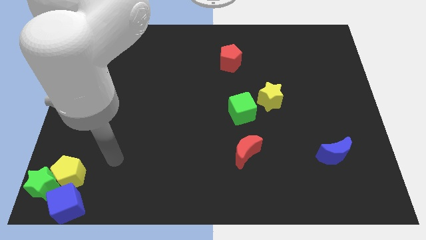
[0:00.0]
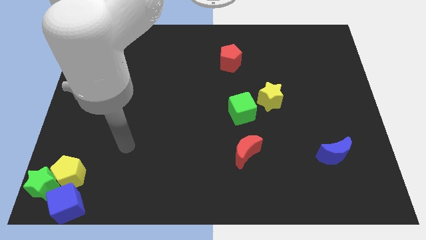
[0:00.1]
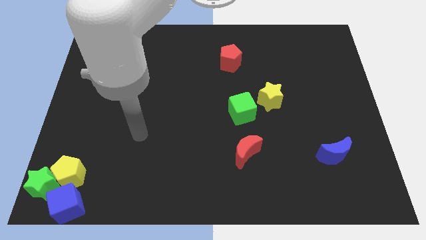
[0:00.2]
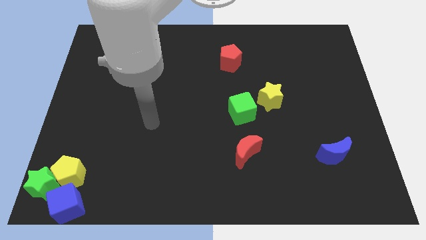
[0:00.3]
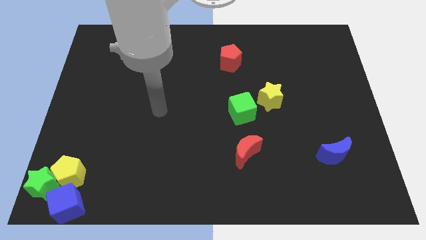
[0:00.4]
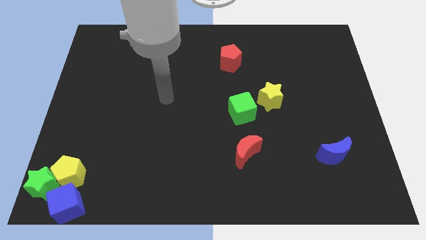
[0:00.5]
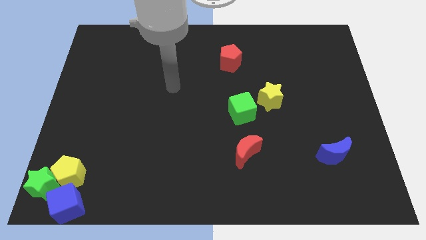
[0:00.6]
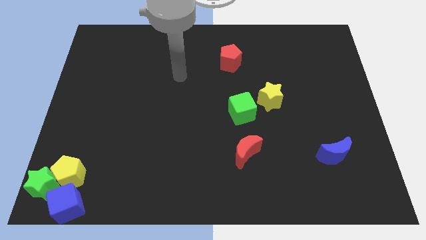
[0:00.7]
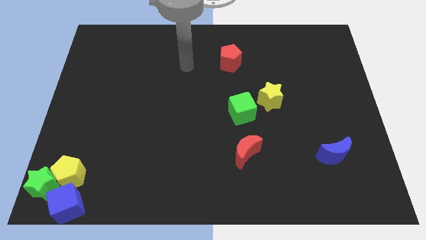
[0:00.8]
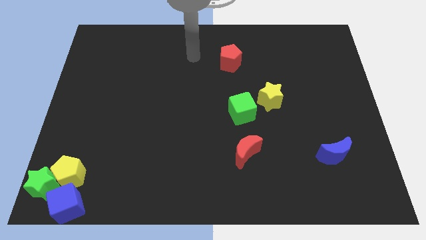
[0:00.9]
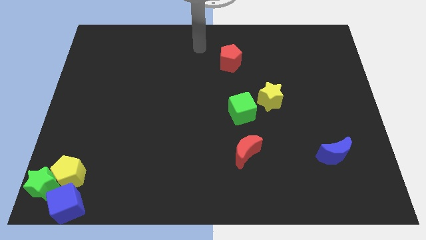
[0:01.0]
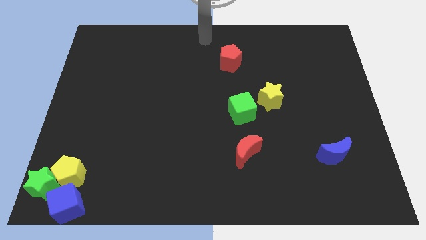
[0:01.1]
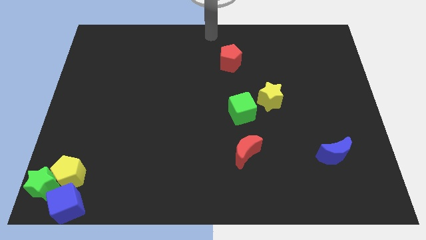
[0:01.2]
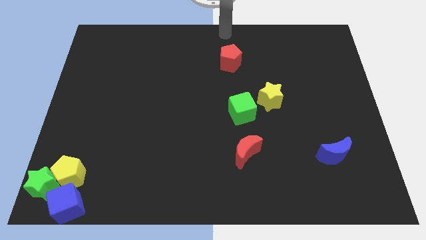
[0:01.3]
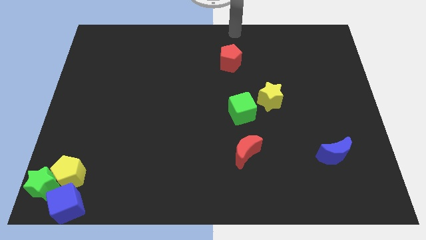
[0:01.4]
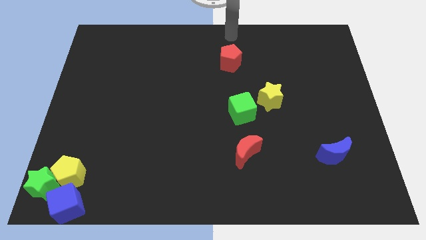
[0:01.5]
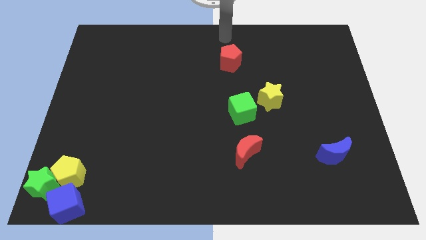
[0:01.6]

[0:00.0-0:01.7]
point your arm at the top of the red pentagon

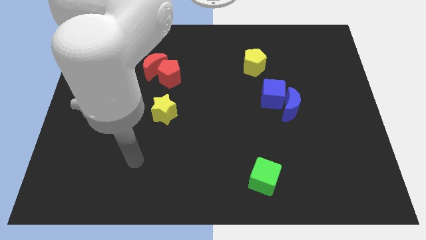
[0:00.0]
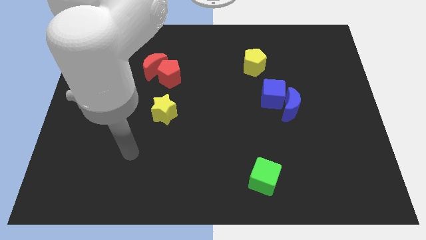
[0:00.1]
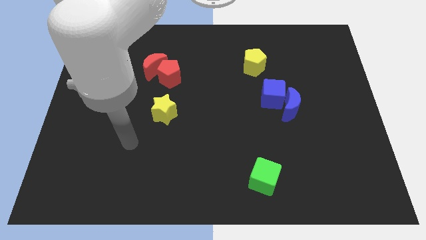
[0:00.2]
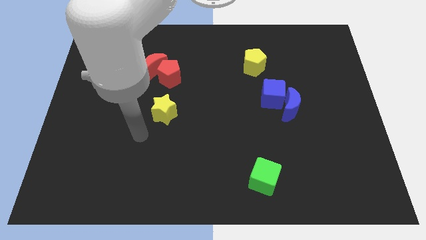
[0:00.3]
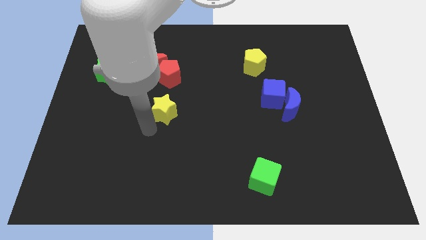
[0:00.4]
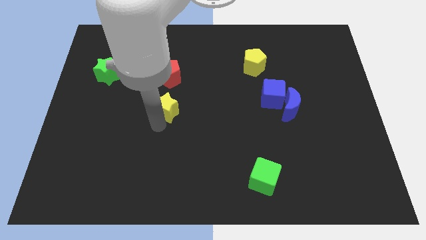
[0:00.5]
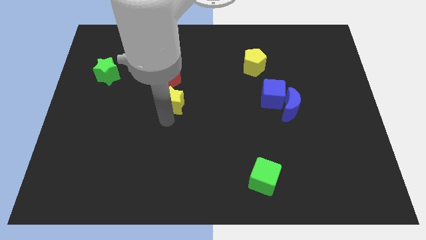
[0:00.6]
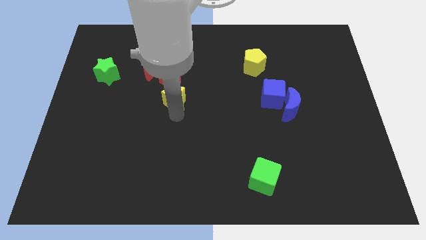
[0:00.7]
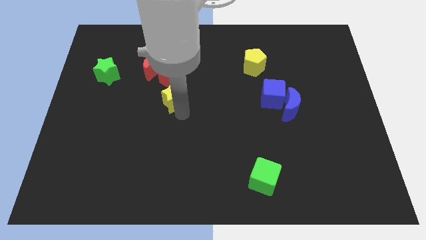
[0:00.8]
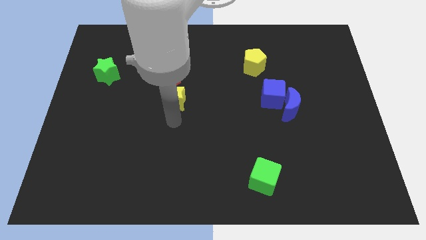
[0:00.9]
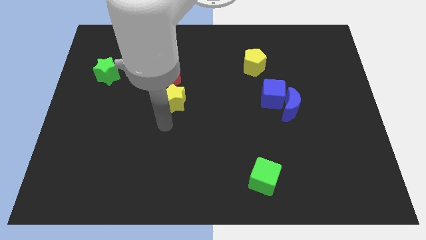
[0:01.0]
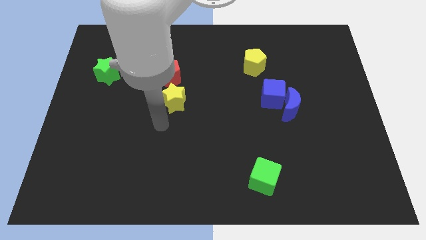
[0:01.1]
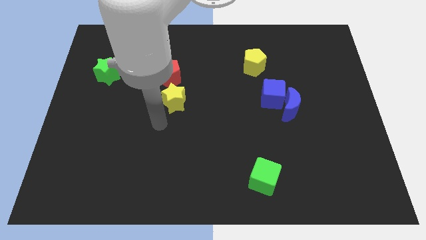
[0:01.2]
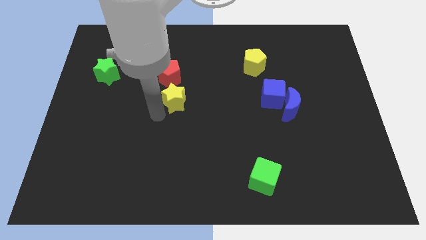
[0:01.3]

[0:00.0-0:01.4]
place the yellow star at the bottom of red pentagon

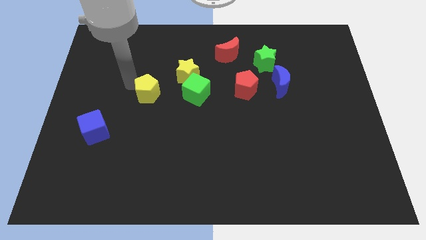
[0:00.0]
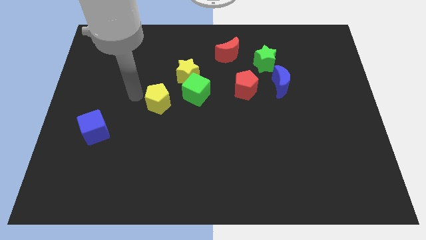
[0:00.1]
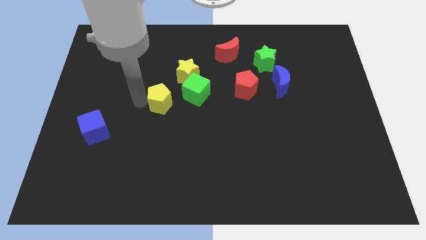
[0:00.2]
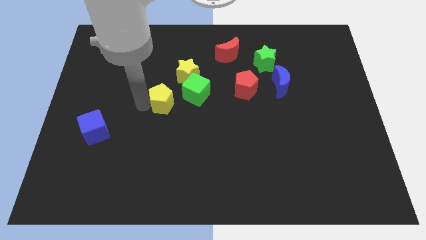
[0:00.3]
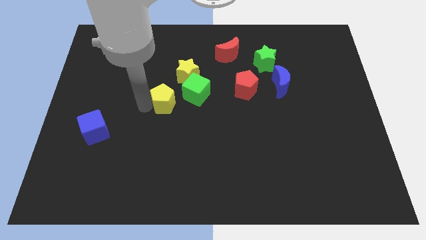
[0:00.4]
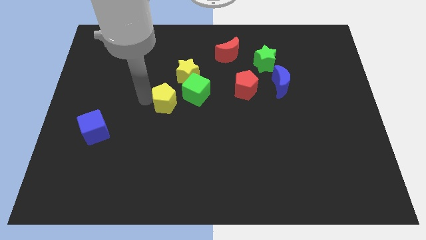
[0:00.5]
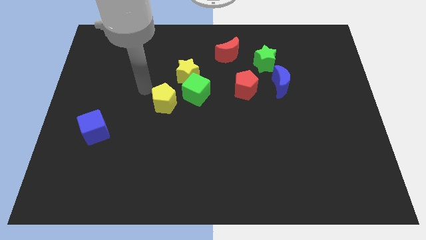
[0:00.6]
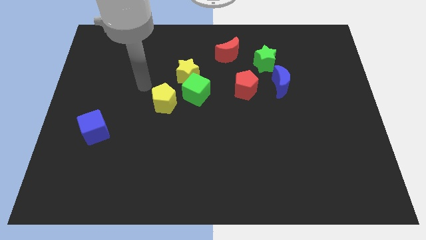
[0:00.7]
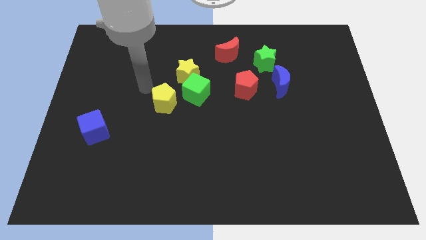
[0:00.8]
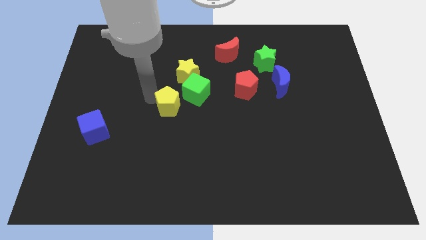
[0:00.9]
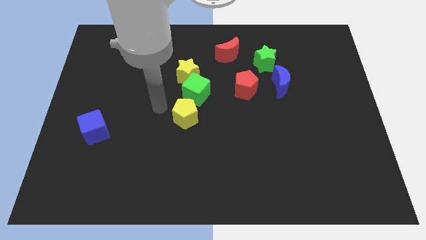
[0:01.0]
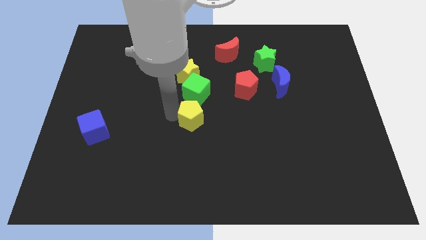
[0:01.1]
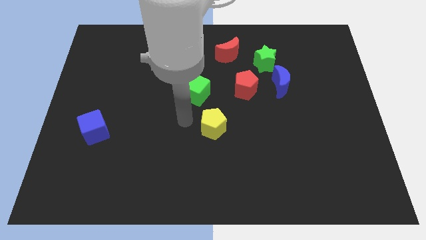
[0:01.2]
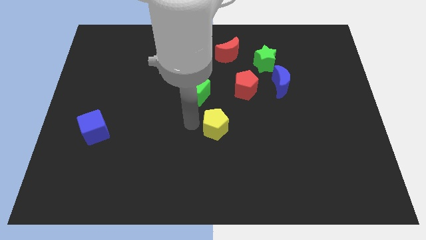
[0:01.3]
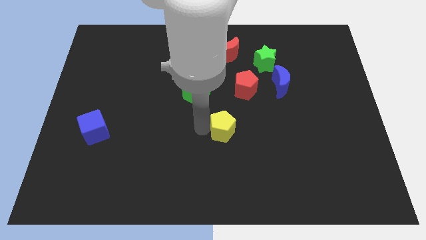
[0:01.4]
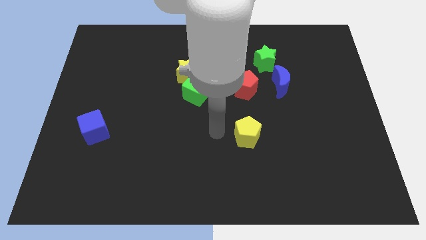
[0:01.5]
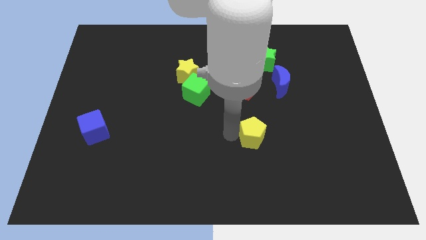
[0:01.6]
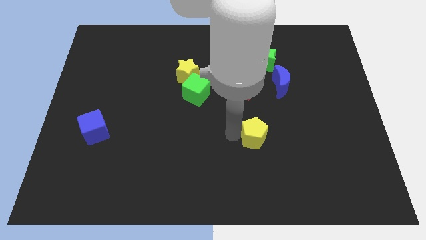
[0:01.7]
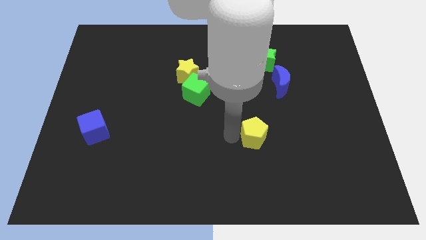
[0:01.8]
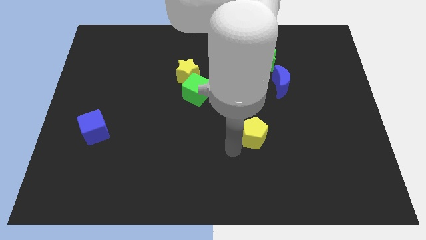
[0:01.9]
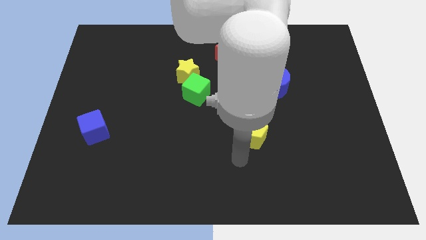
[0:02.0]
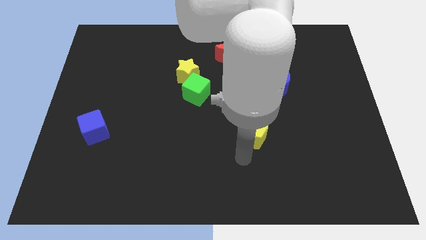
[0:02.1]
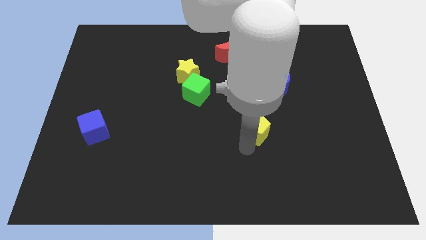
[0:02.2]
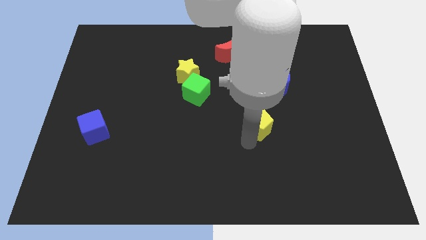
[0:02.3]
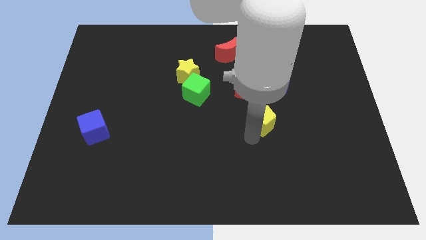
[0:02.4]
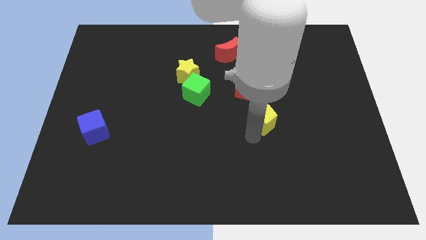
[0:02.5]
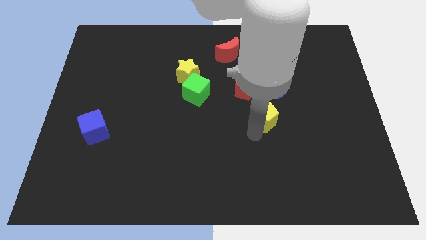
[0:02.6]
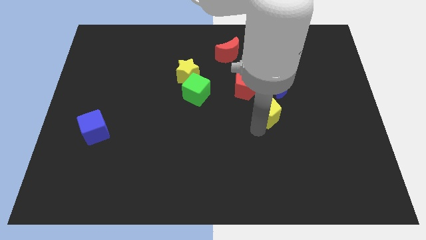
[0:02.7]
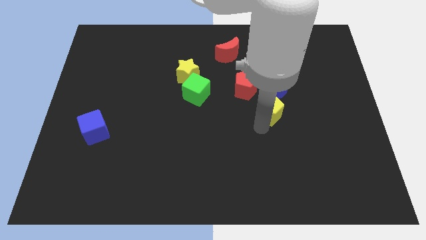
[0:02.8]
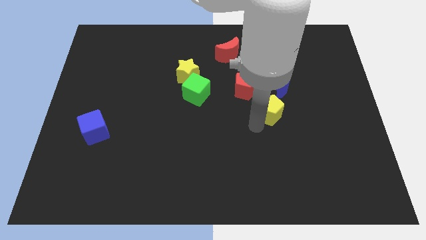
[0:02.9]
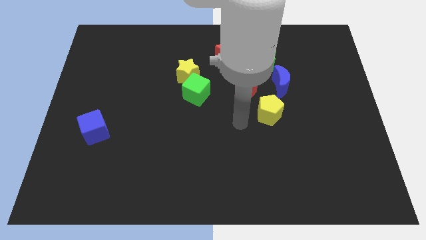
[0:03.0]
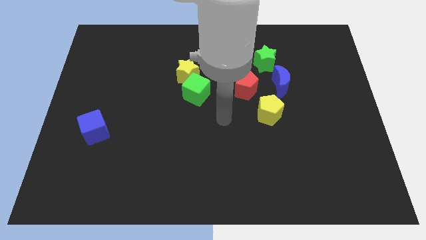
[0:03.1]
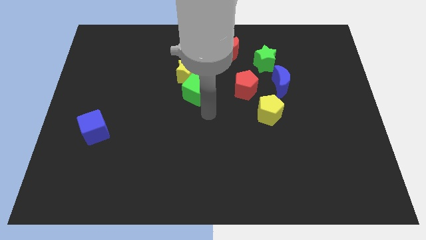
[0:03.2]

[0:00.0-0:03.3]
place the yellow pentagon below the blue crescent

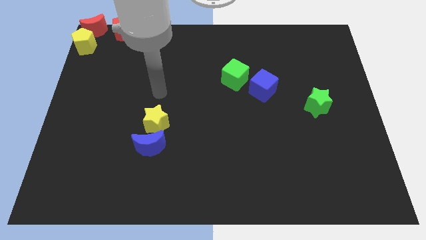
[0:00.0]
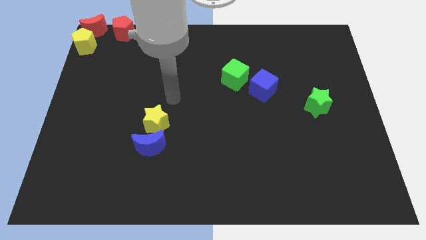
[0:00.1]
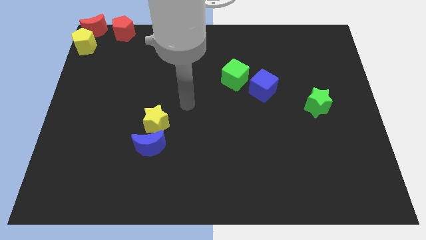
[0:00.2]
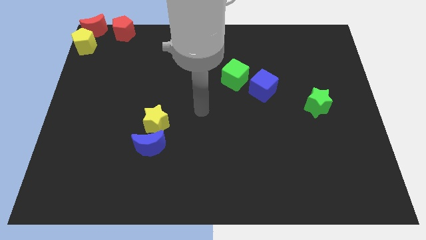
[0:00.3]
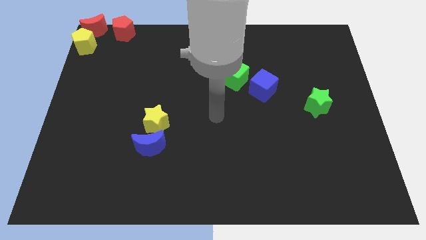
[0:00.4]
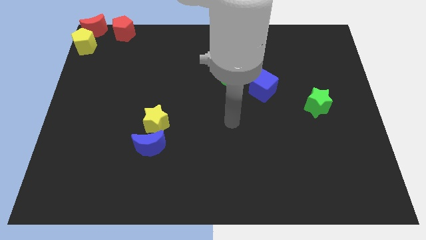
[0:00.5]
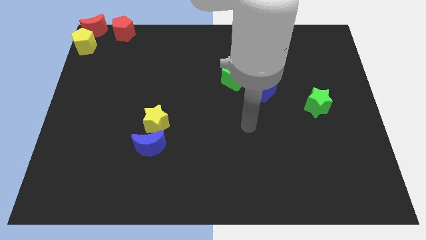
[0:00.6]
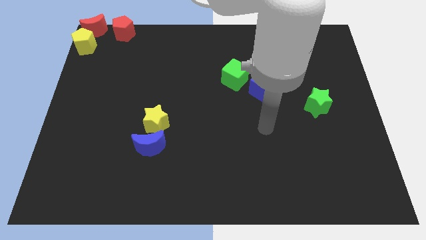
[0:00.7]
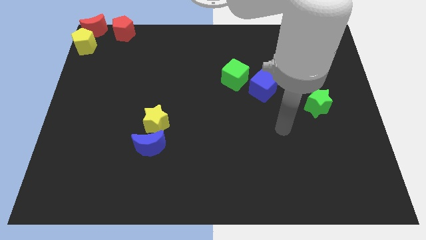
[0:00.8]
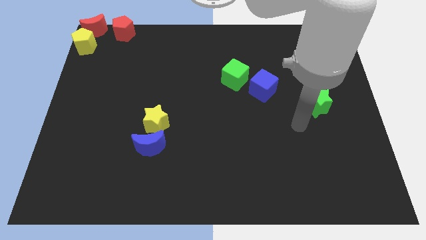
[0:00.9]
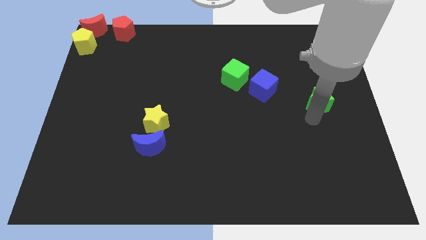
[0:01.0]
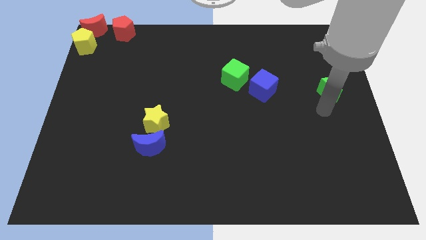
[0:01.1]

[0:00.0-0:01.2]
tap the bottom left of the green star

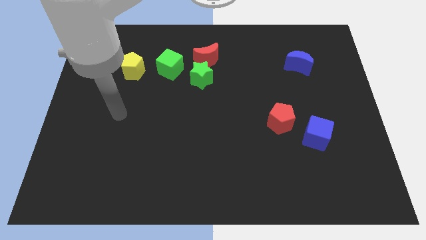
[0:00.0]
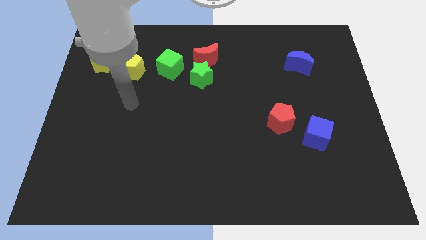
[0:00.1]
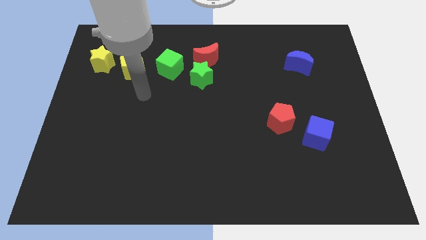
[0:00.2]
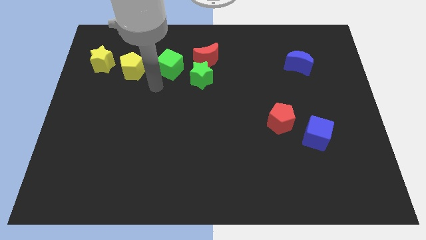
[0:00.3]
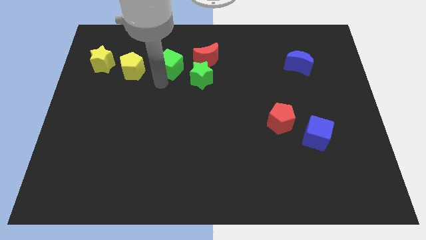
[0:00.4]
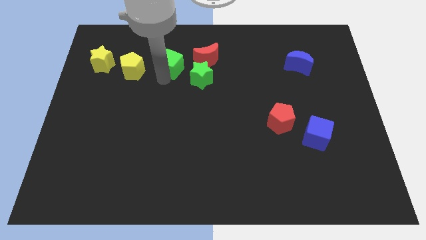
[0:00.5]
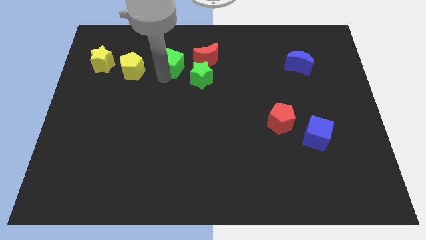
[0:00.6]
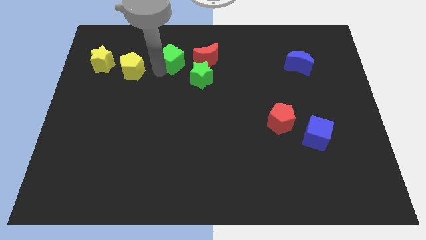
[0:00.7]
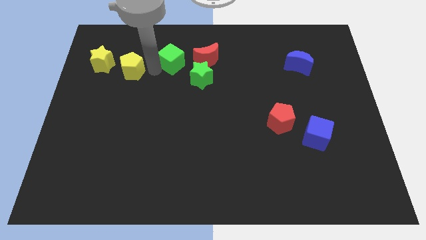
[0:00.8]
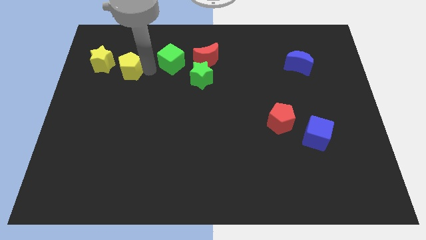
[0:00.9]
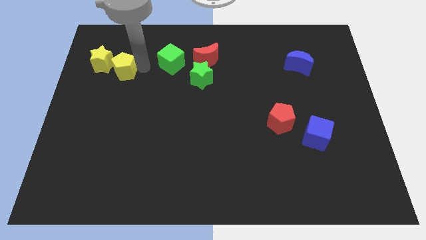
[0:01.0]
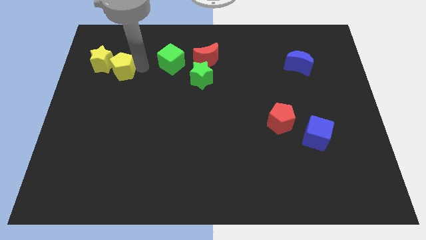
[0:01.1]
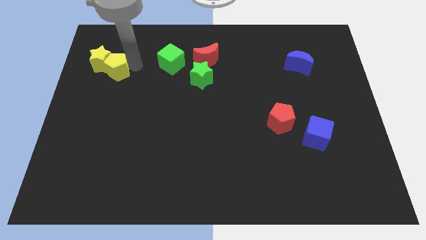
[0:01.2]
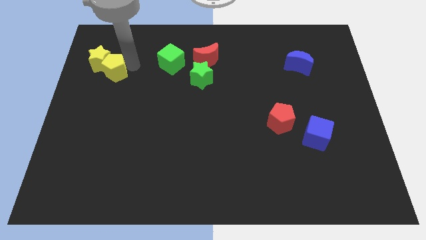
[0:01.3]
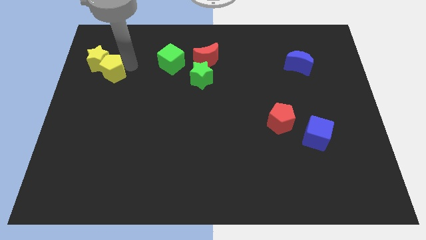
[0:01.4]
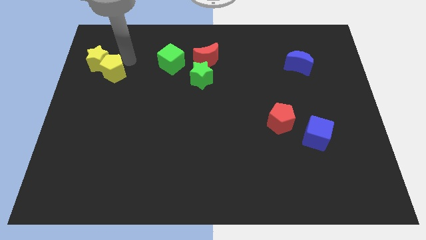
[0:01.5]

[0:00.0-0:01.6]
tap the green cube towards the right side of the board
